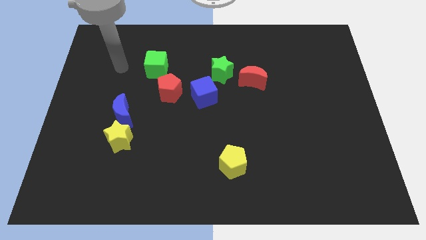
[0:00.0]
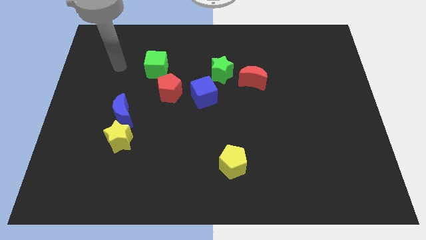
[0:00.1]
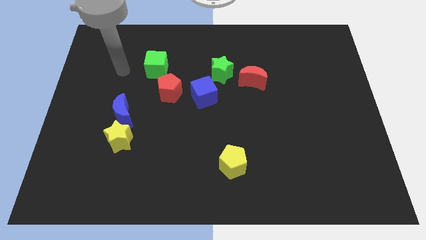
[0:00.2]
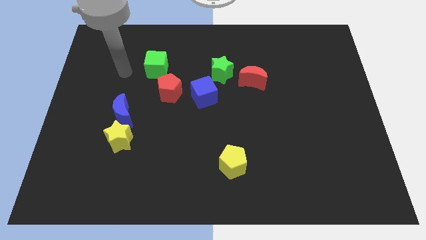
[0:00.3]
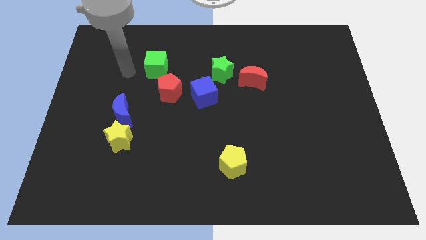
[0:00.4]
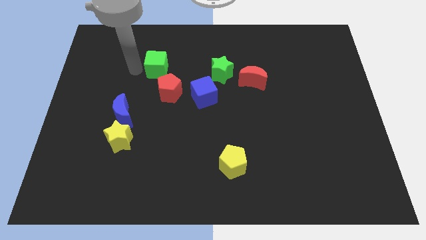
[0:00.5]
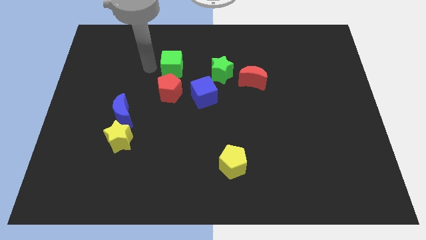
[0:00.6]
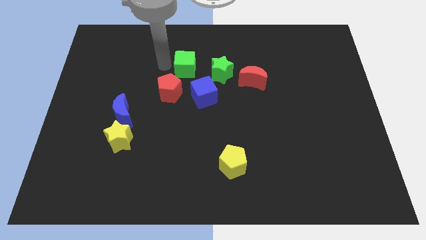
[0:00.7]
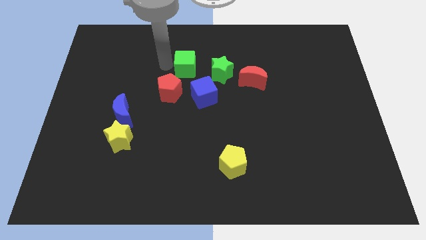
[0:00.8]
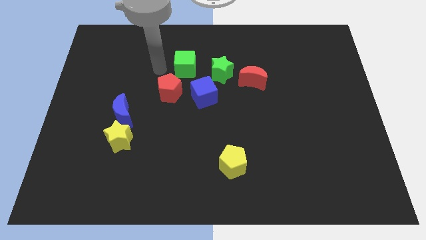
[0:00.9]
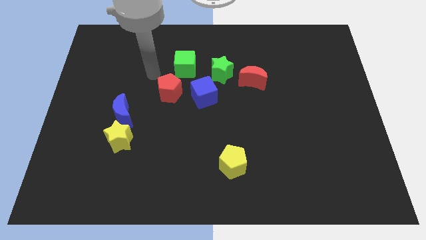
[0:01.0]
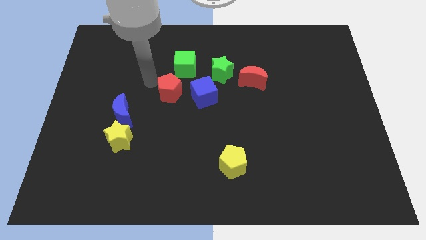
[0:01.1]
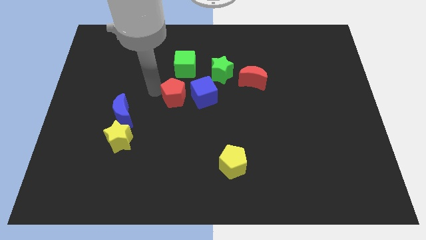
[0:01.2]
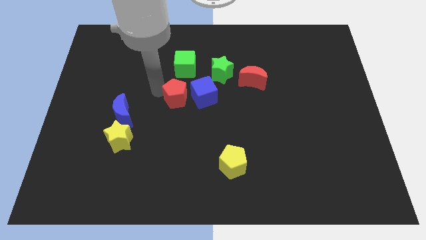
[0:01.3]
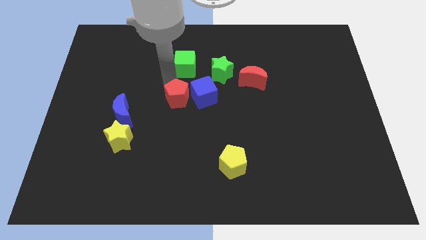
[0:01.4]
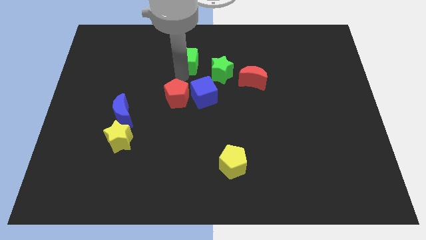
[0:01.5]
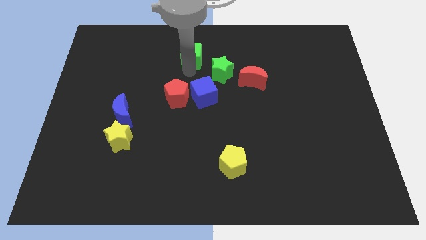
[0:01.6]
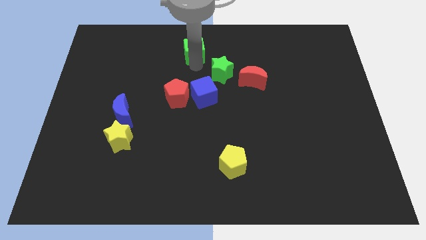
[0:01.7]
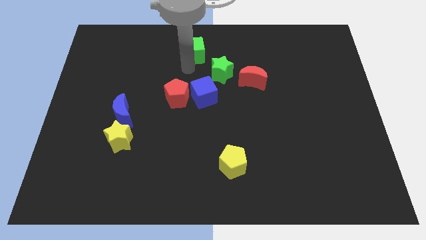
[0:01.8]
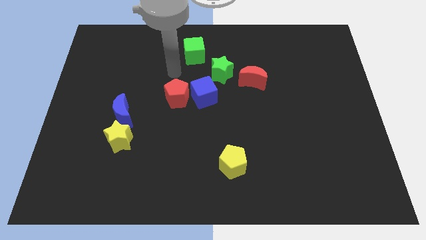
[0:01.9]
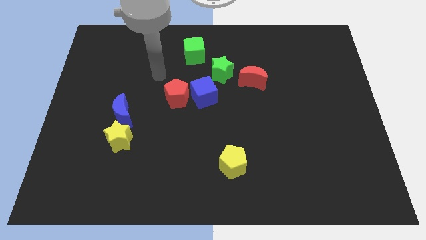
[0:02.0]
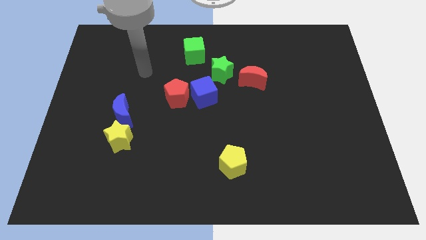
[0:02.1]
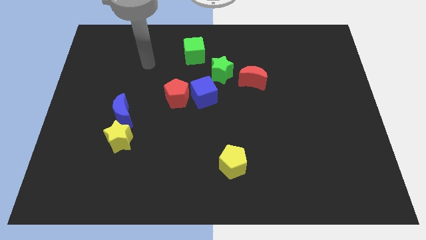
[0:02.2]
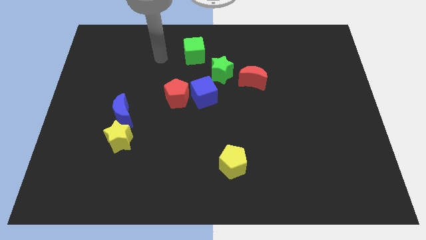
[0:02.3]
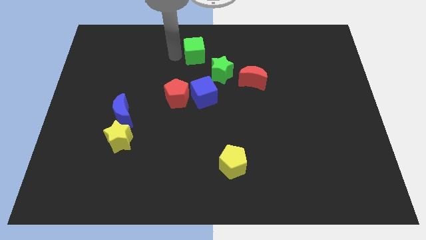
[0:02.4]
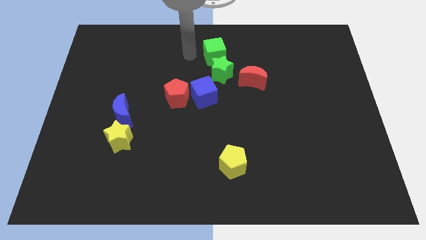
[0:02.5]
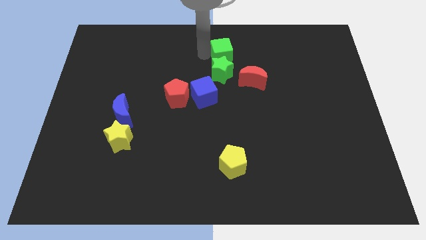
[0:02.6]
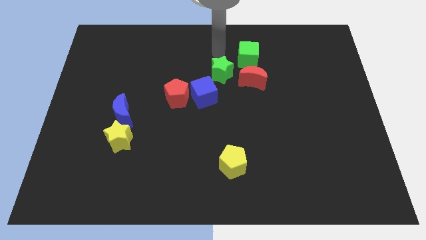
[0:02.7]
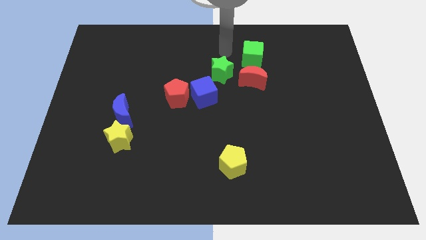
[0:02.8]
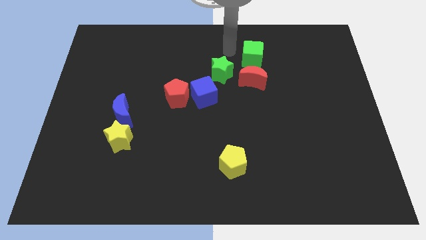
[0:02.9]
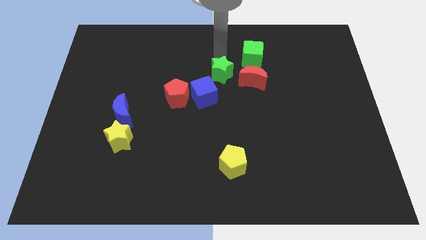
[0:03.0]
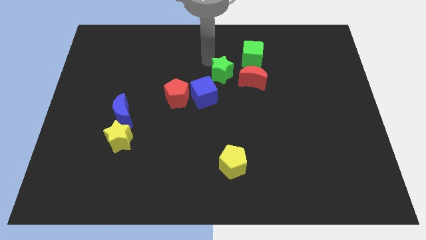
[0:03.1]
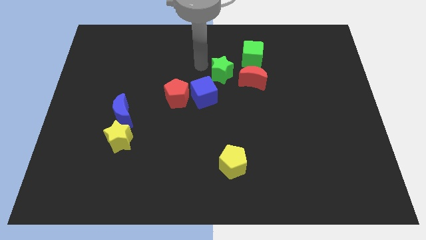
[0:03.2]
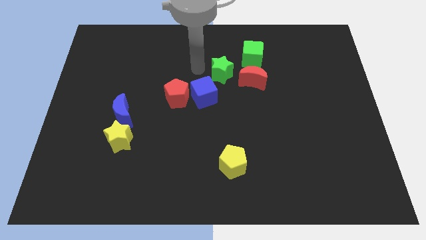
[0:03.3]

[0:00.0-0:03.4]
push the green cube to the top of the red crescent

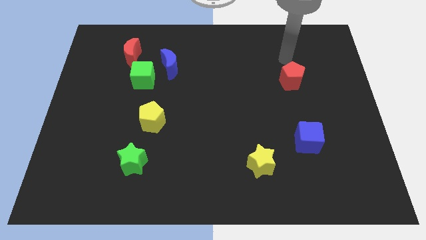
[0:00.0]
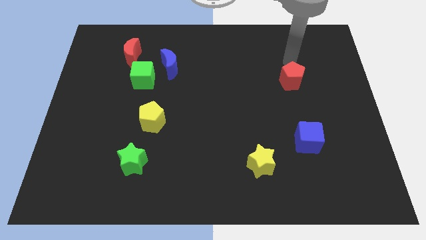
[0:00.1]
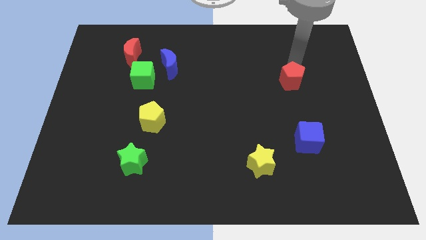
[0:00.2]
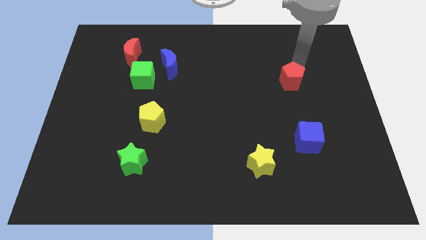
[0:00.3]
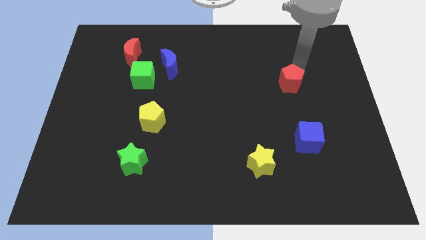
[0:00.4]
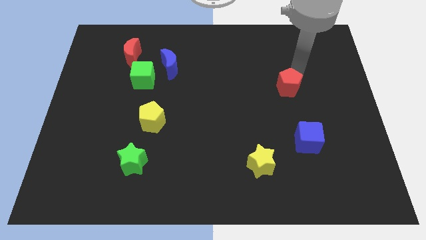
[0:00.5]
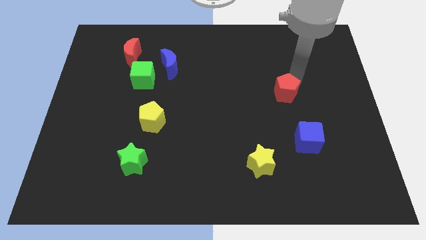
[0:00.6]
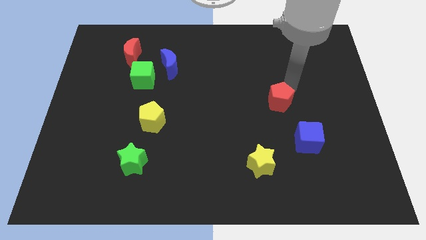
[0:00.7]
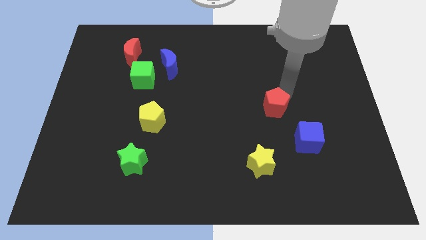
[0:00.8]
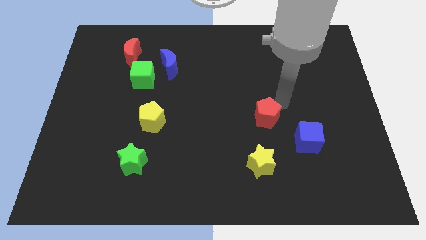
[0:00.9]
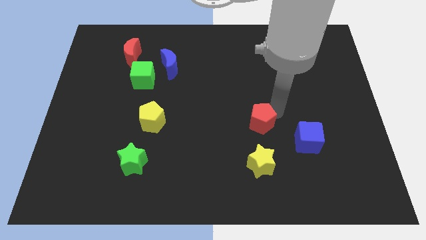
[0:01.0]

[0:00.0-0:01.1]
move the red pentagon above the yellow star

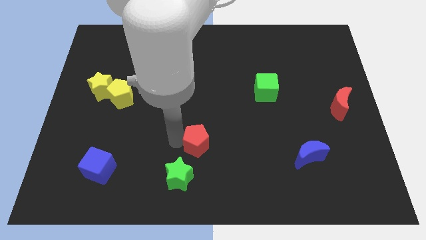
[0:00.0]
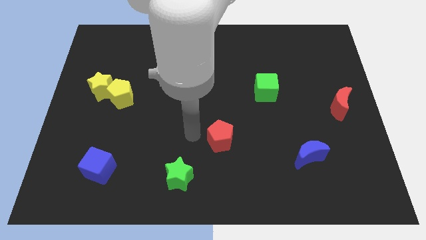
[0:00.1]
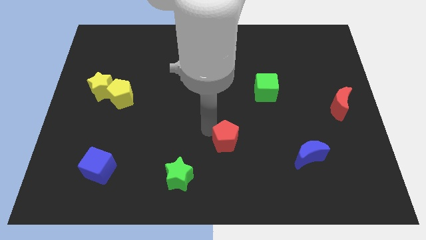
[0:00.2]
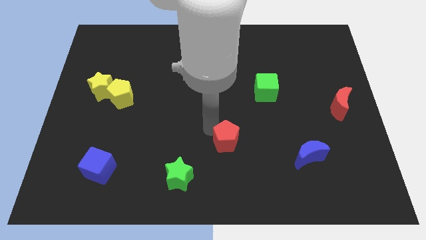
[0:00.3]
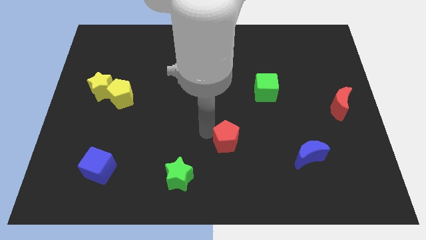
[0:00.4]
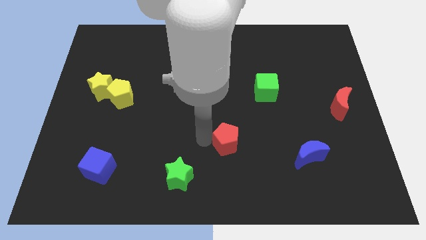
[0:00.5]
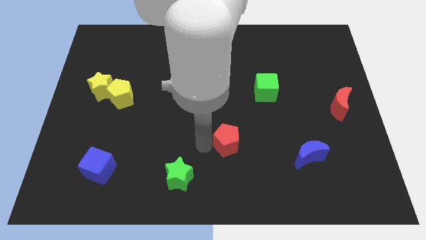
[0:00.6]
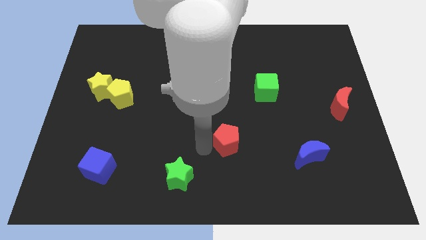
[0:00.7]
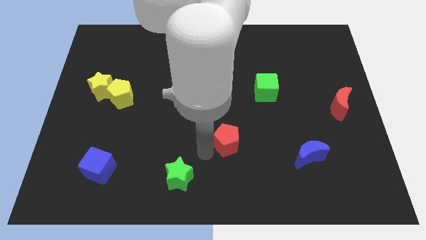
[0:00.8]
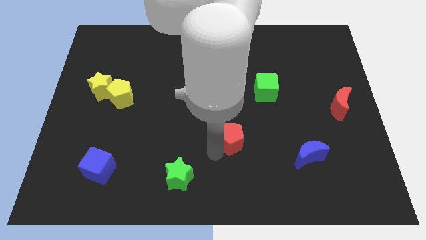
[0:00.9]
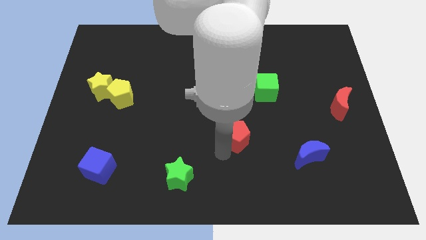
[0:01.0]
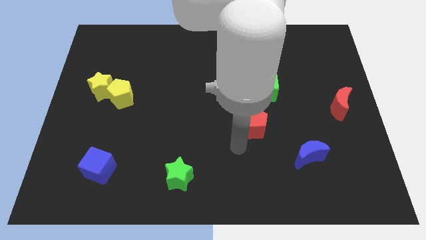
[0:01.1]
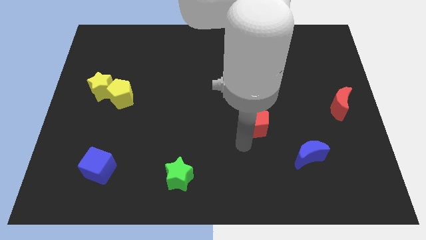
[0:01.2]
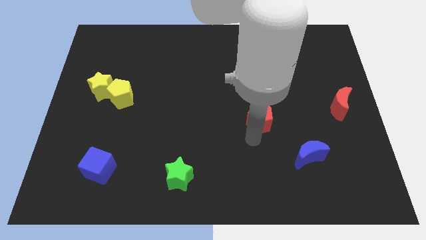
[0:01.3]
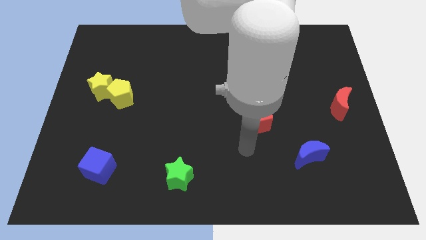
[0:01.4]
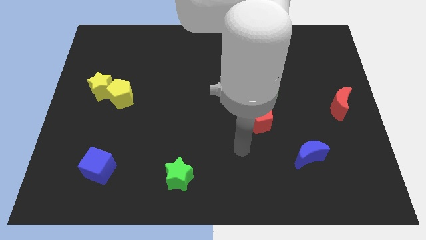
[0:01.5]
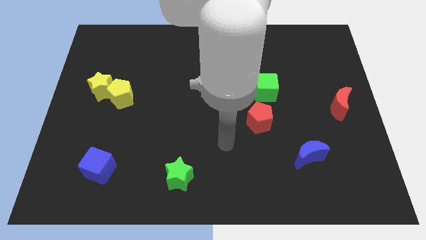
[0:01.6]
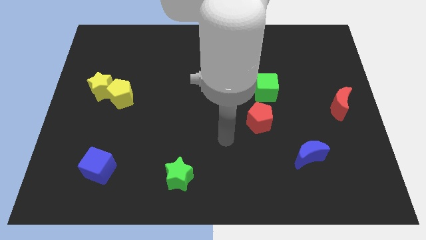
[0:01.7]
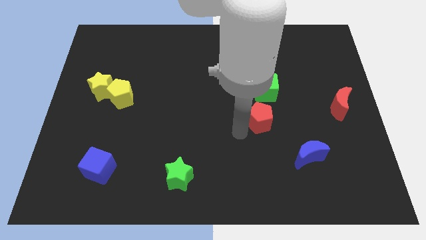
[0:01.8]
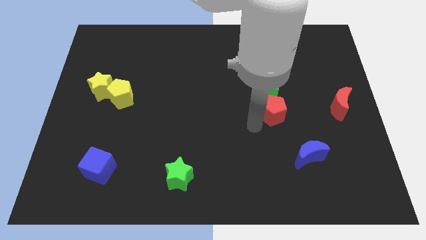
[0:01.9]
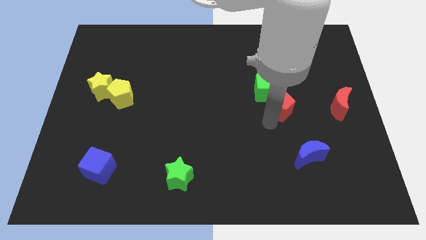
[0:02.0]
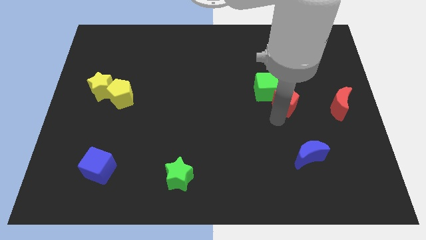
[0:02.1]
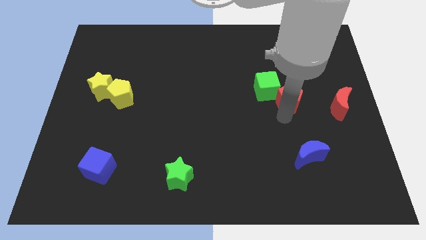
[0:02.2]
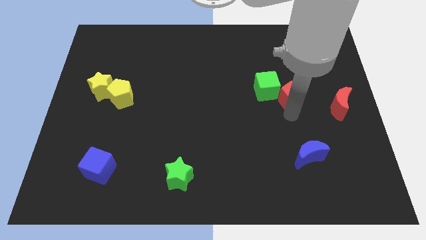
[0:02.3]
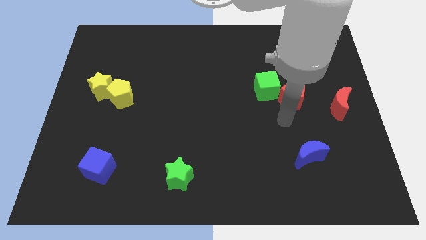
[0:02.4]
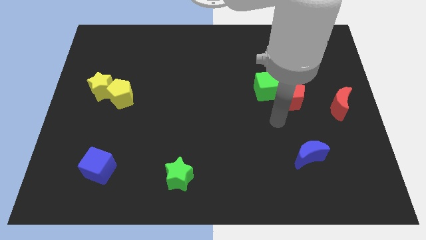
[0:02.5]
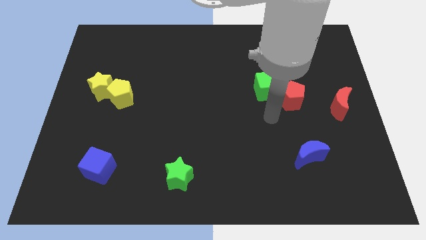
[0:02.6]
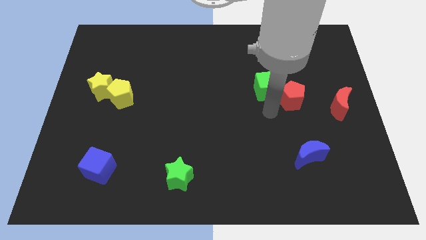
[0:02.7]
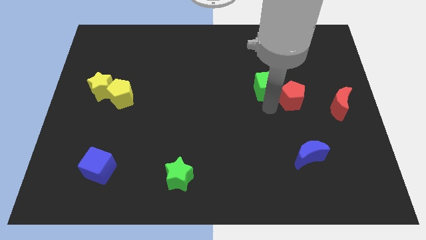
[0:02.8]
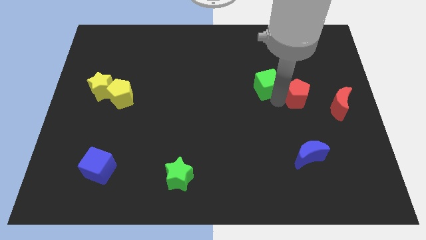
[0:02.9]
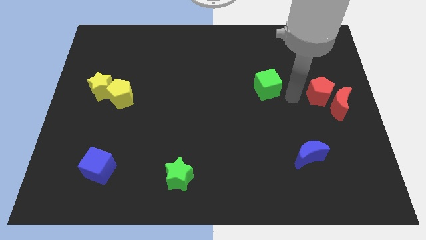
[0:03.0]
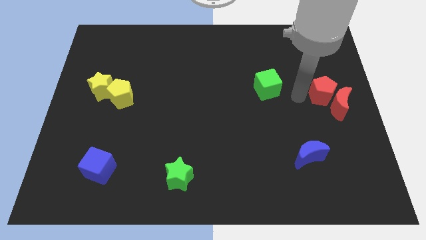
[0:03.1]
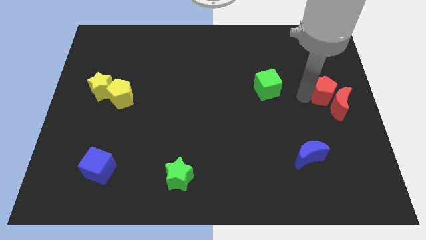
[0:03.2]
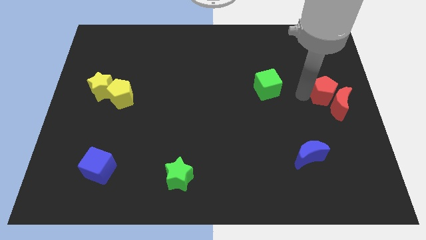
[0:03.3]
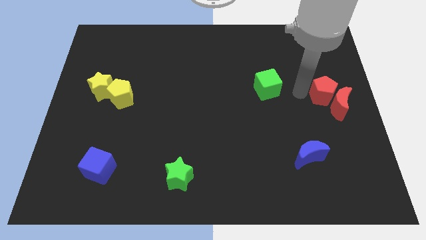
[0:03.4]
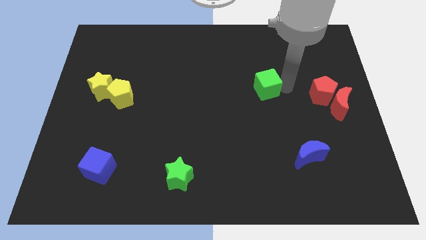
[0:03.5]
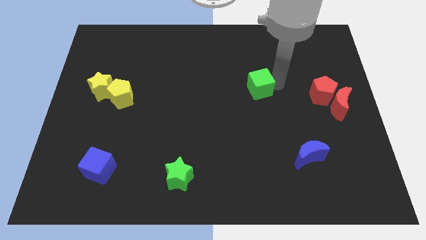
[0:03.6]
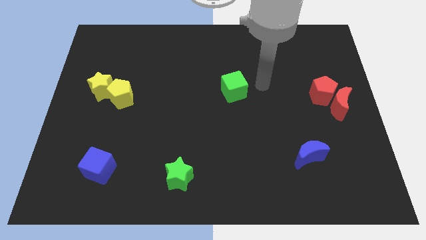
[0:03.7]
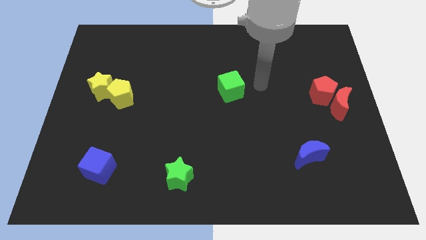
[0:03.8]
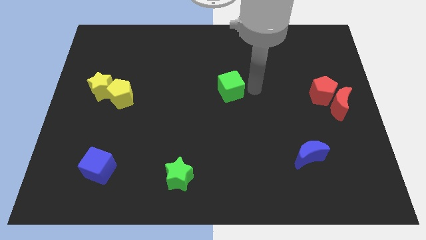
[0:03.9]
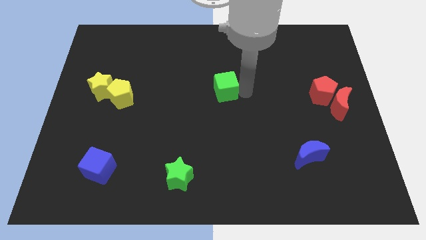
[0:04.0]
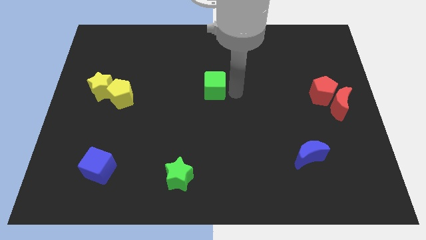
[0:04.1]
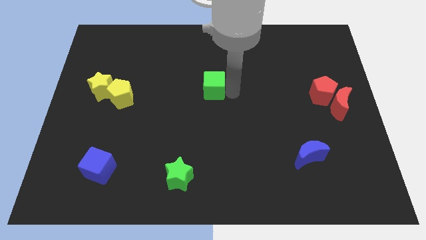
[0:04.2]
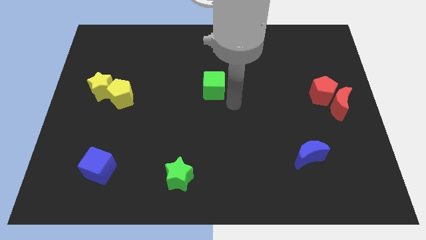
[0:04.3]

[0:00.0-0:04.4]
move the red pentagon to the left side of red crescent
